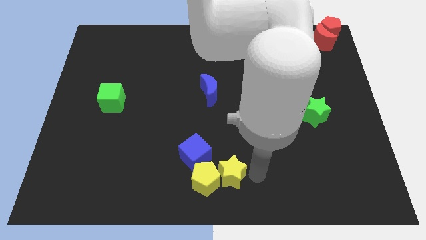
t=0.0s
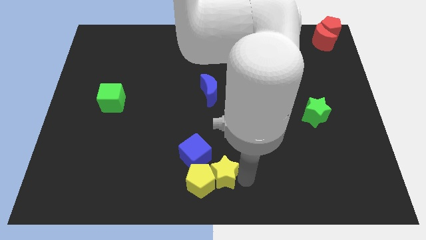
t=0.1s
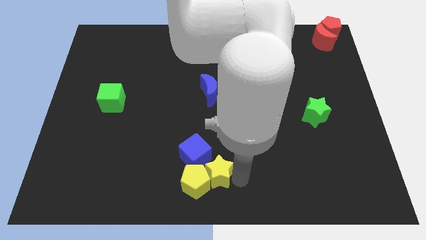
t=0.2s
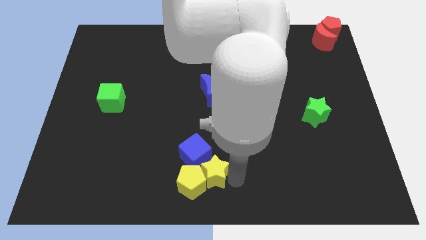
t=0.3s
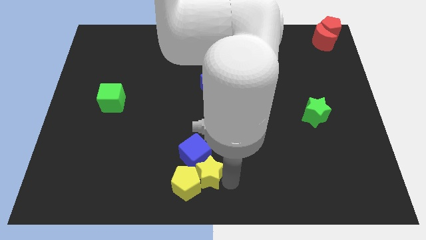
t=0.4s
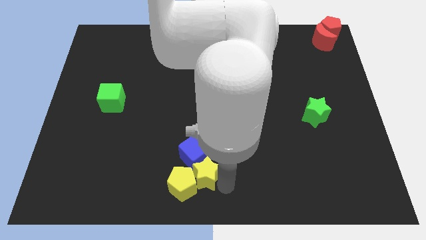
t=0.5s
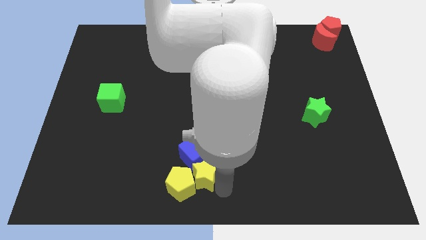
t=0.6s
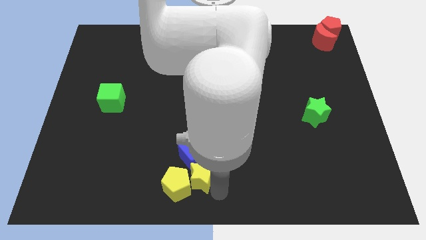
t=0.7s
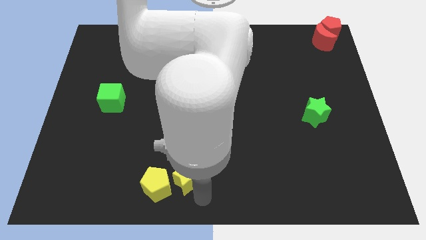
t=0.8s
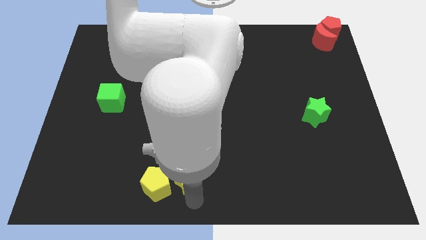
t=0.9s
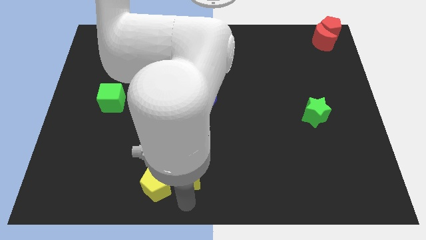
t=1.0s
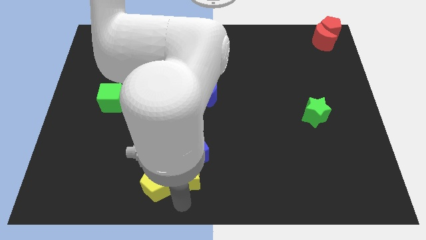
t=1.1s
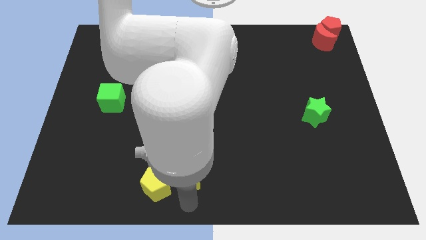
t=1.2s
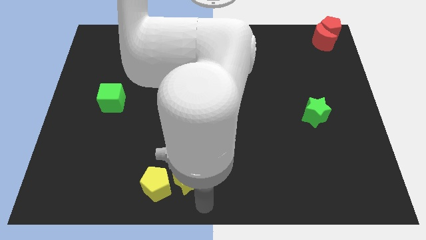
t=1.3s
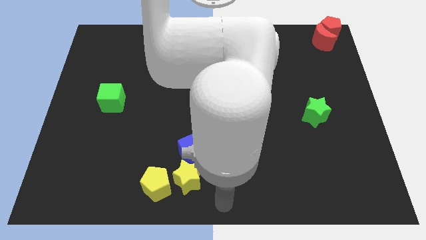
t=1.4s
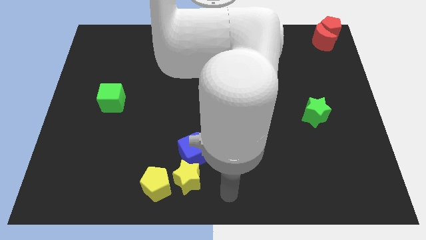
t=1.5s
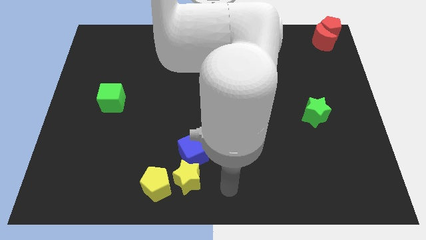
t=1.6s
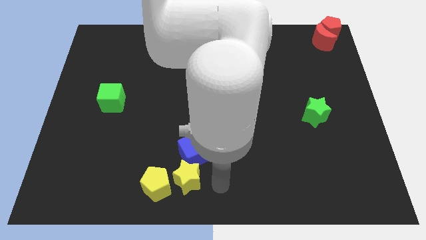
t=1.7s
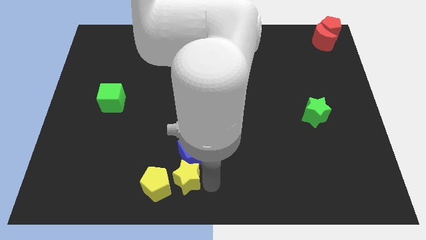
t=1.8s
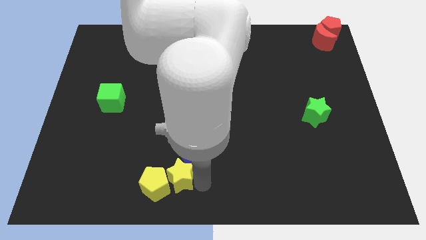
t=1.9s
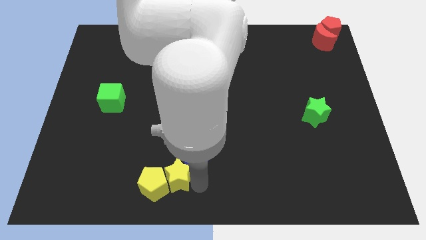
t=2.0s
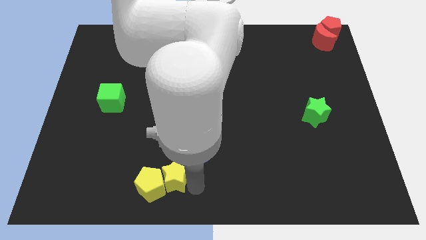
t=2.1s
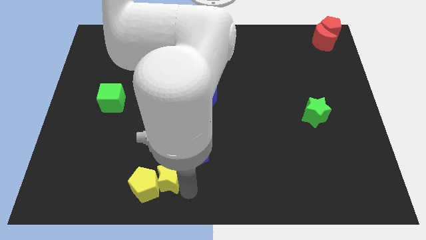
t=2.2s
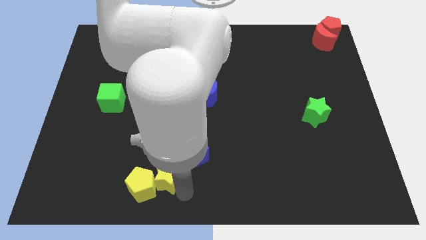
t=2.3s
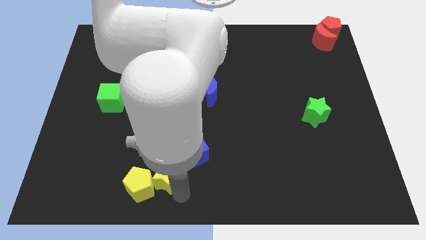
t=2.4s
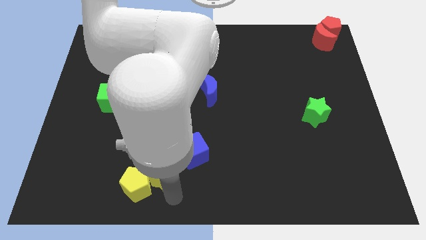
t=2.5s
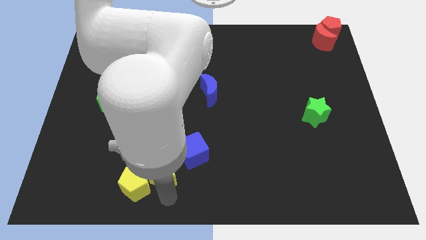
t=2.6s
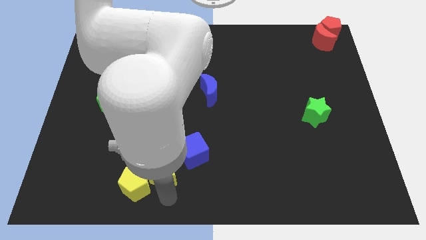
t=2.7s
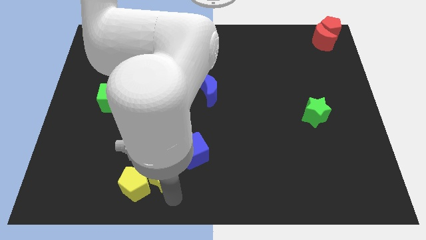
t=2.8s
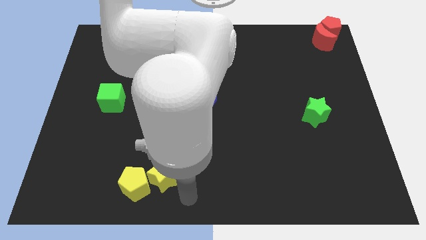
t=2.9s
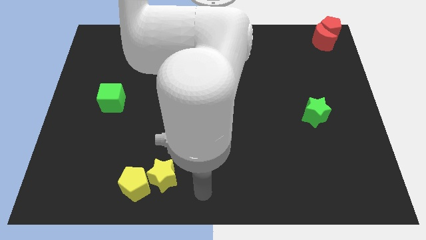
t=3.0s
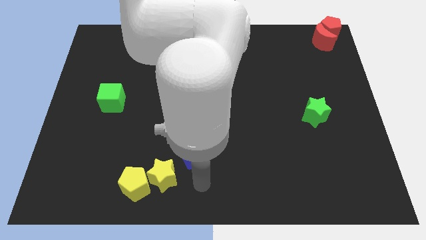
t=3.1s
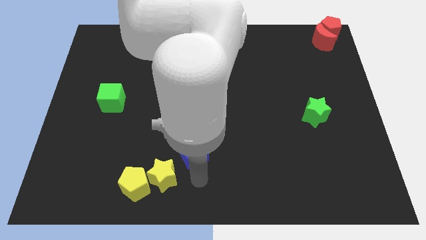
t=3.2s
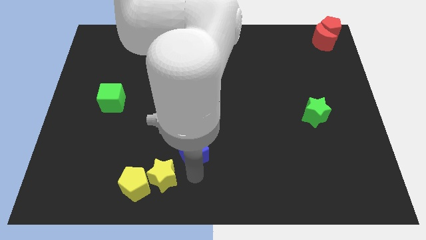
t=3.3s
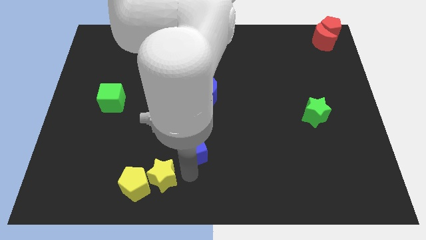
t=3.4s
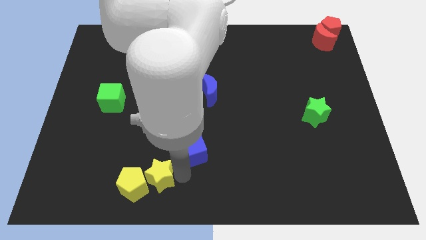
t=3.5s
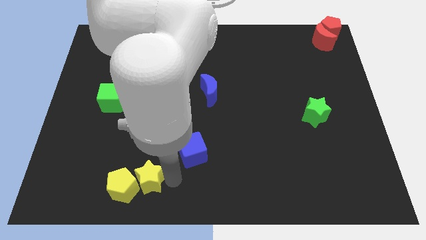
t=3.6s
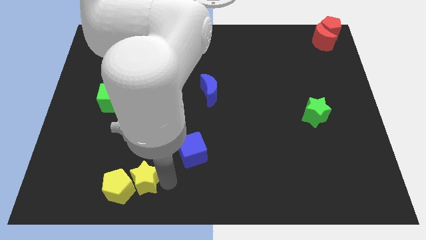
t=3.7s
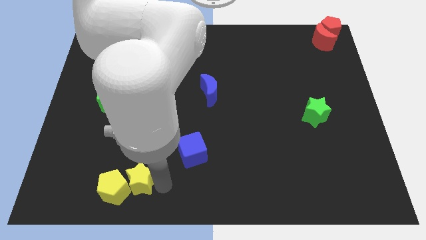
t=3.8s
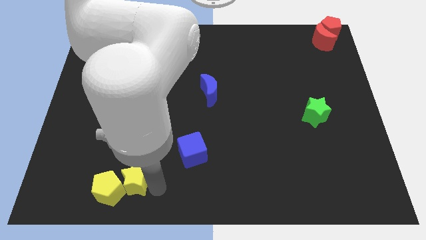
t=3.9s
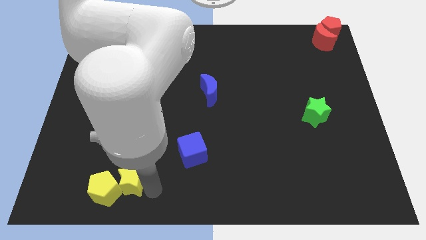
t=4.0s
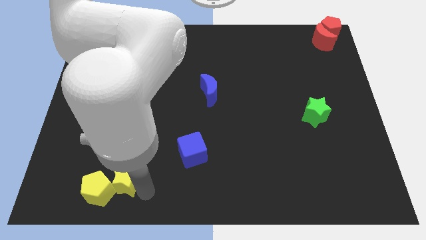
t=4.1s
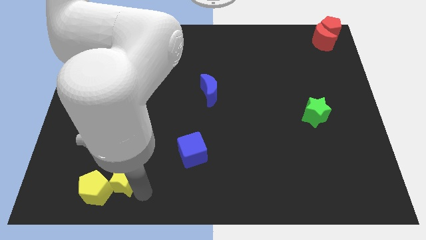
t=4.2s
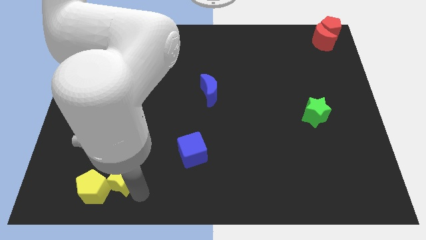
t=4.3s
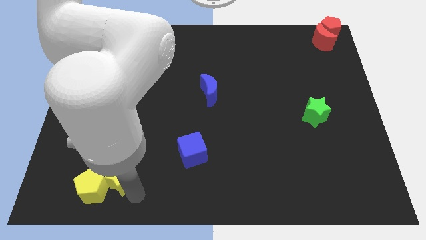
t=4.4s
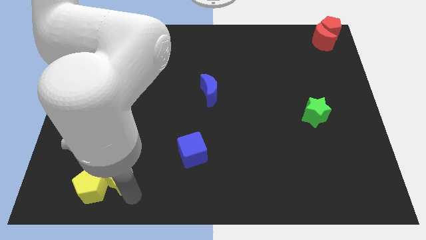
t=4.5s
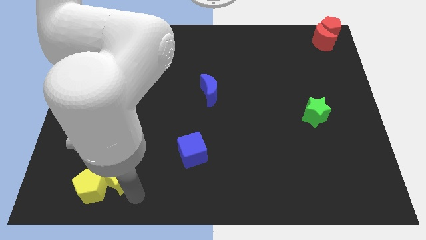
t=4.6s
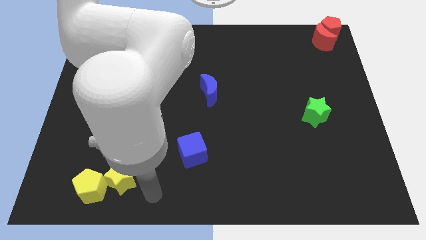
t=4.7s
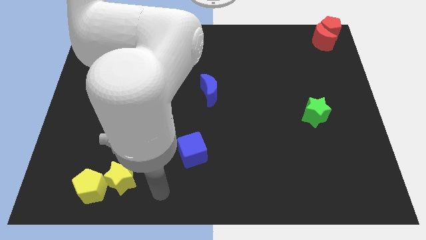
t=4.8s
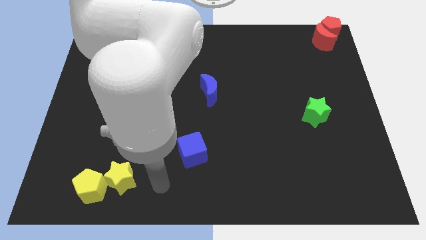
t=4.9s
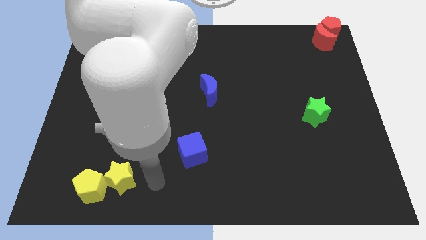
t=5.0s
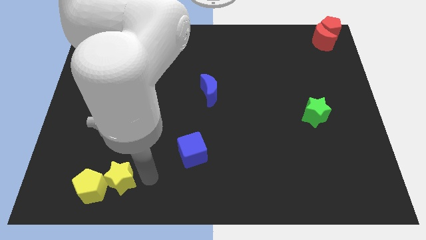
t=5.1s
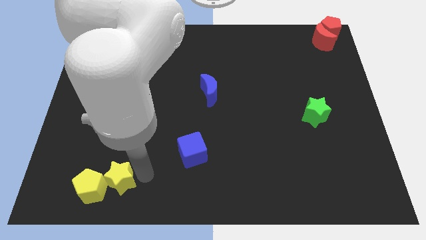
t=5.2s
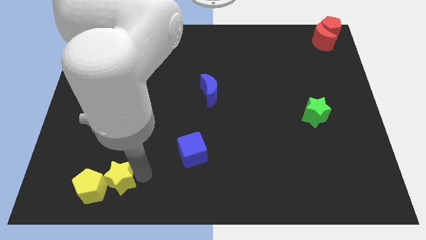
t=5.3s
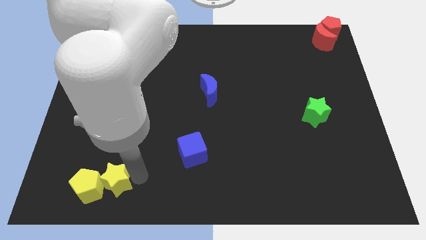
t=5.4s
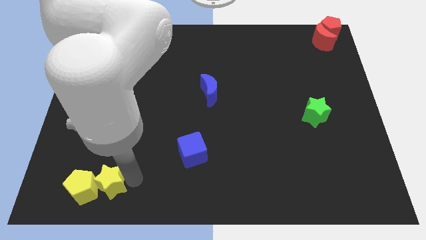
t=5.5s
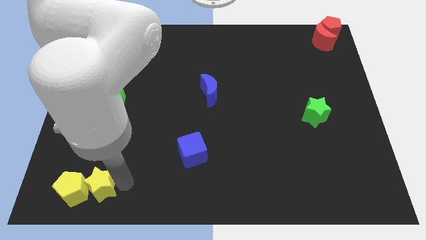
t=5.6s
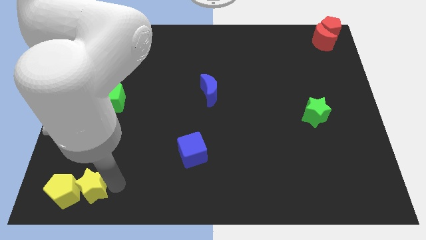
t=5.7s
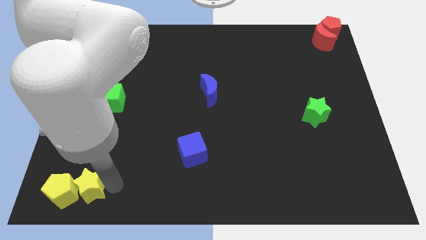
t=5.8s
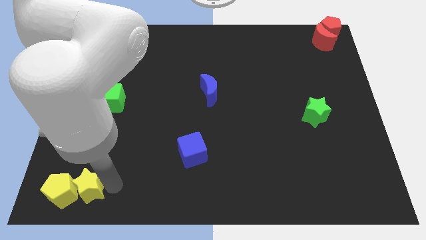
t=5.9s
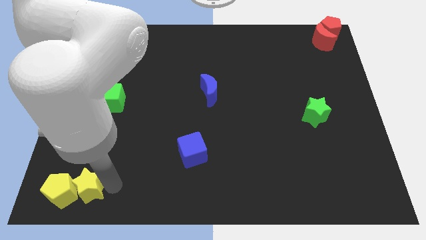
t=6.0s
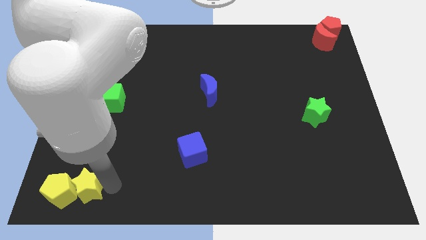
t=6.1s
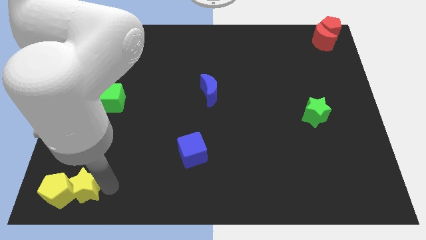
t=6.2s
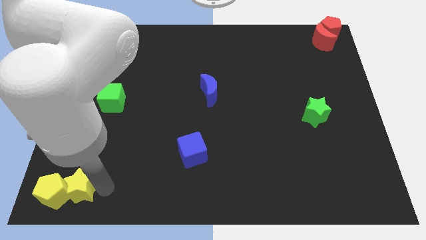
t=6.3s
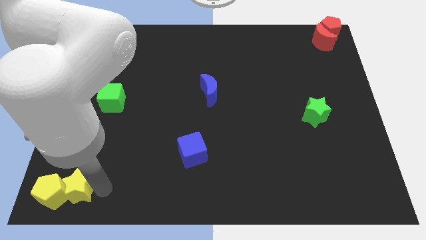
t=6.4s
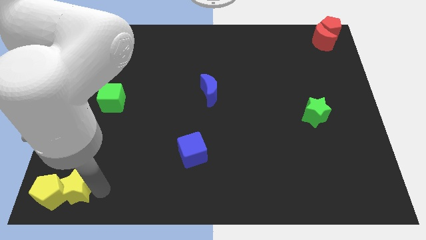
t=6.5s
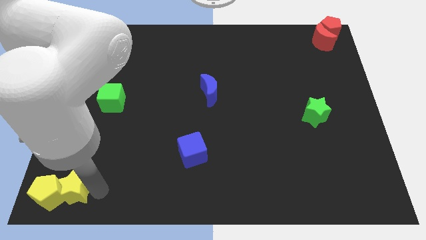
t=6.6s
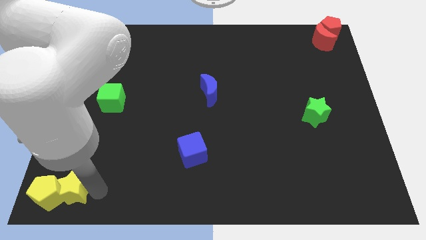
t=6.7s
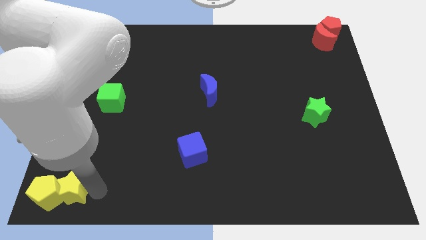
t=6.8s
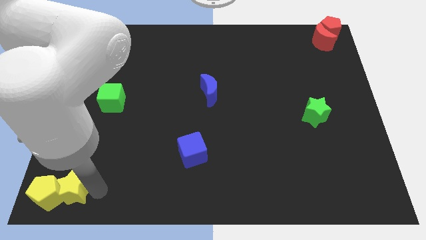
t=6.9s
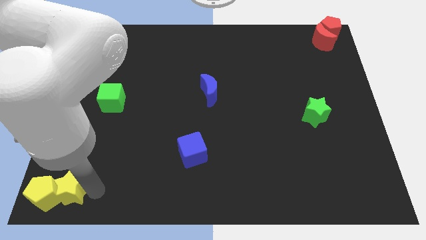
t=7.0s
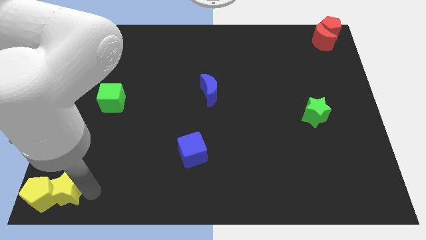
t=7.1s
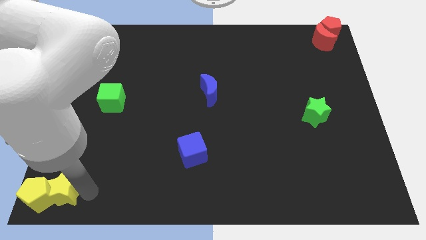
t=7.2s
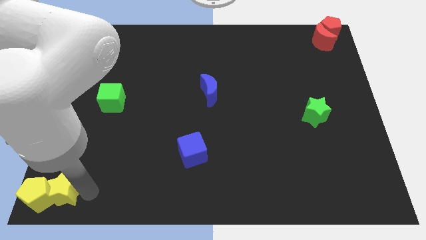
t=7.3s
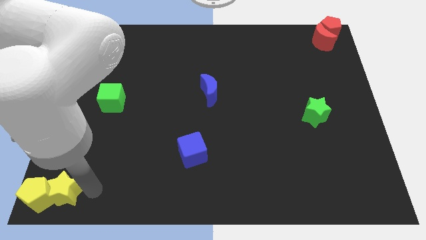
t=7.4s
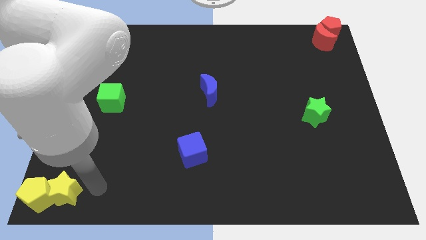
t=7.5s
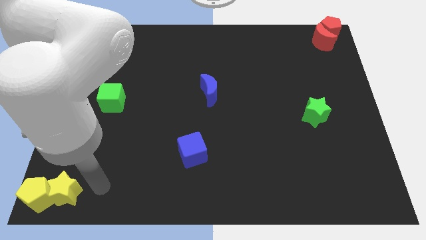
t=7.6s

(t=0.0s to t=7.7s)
push the yellow star along with yellow pentagon to the bottom left of the board

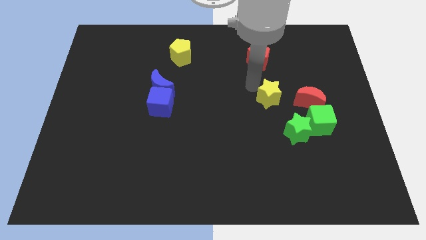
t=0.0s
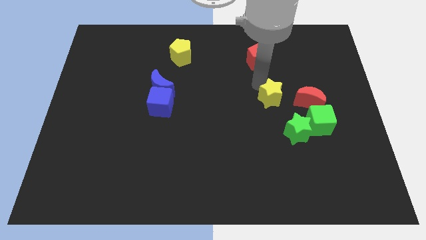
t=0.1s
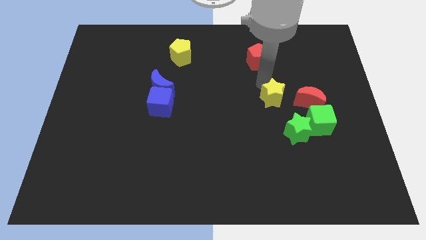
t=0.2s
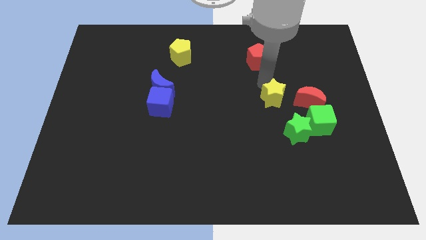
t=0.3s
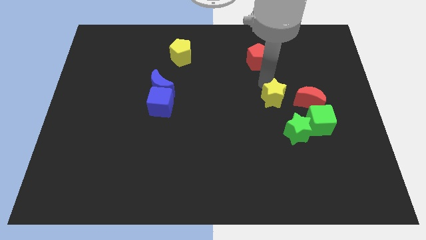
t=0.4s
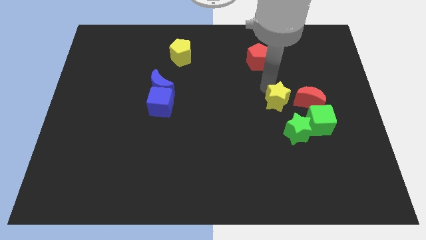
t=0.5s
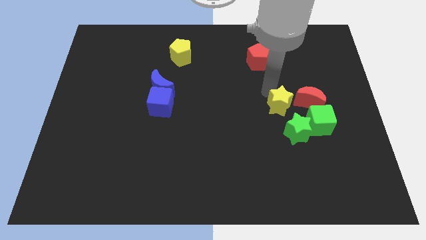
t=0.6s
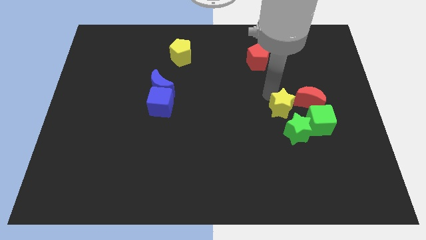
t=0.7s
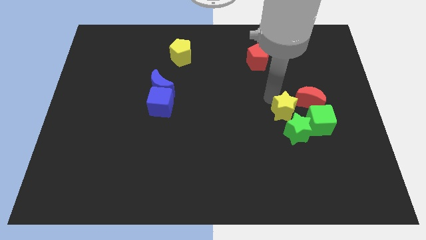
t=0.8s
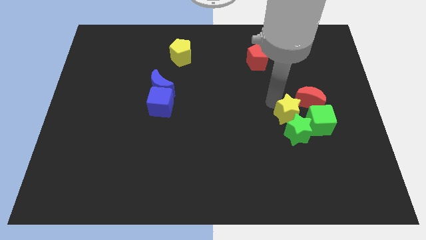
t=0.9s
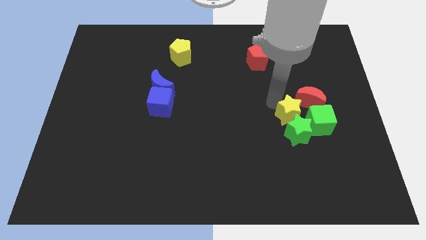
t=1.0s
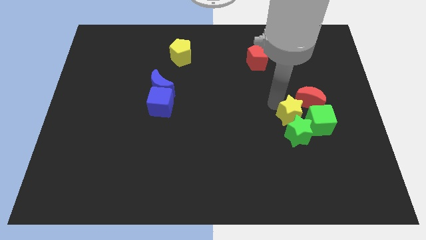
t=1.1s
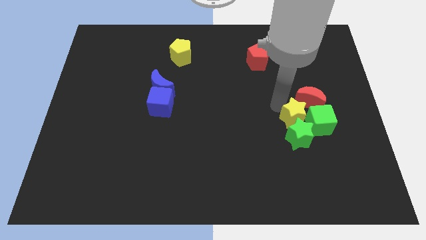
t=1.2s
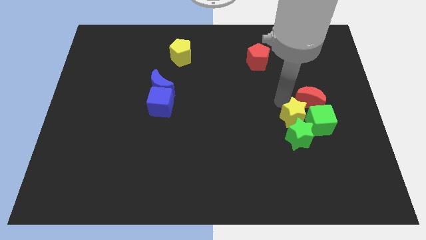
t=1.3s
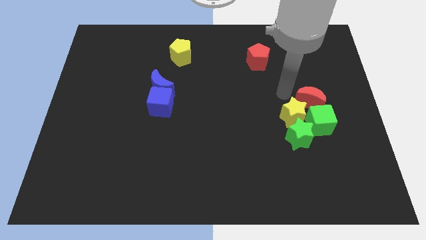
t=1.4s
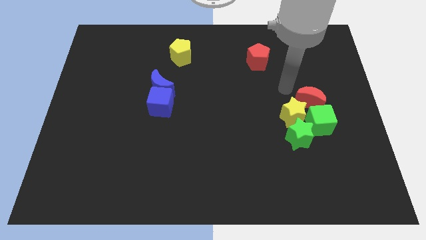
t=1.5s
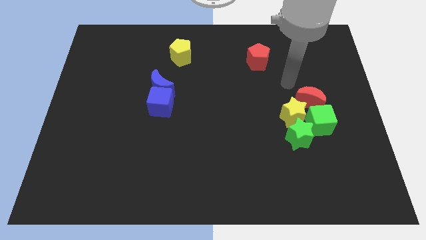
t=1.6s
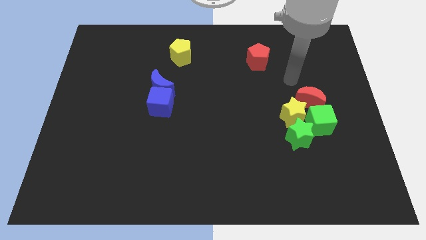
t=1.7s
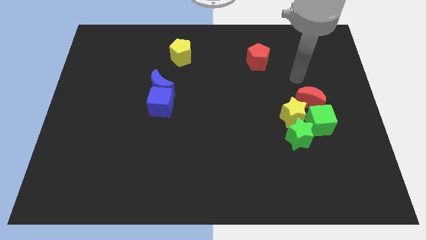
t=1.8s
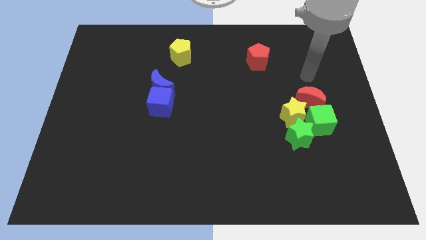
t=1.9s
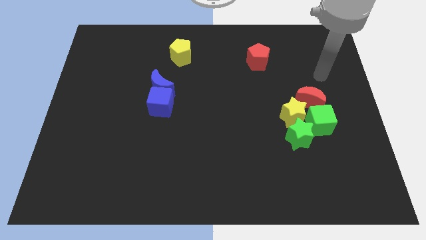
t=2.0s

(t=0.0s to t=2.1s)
place the yellow star above the green star
